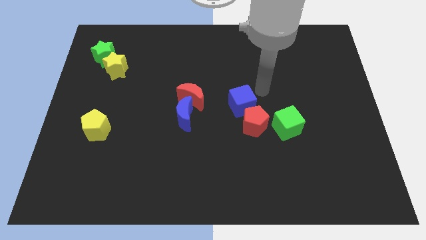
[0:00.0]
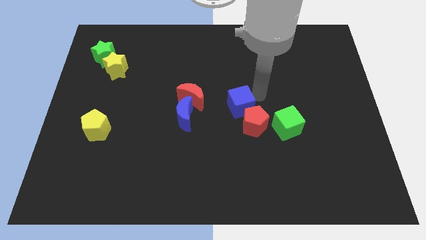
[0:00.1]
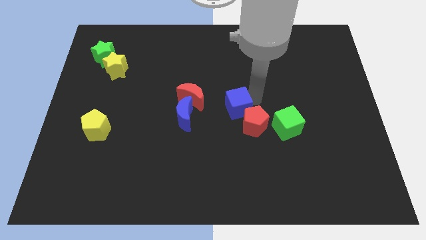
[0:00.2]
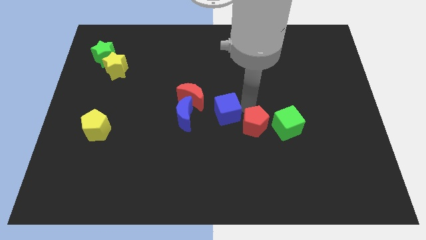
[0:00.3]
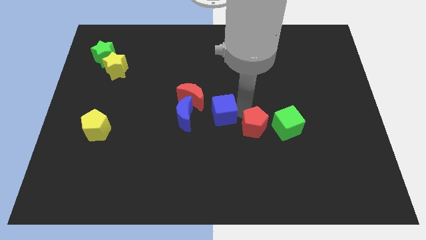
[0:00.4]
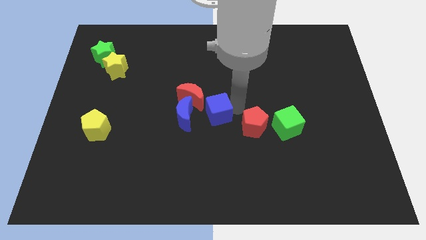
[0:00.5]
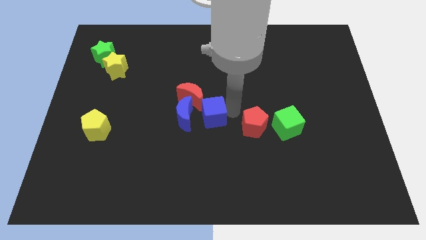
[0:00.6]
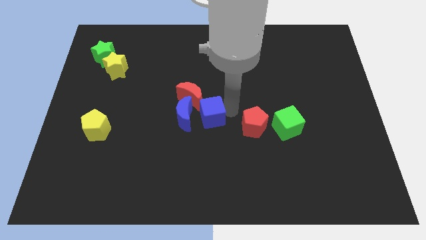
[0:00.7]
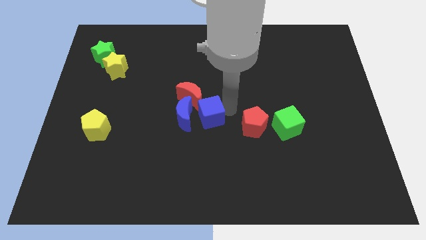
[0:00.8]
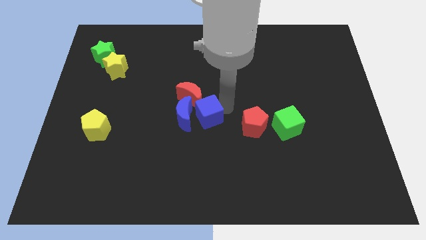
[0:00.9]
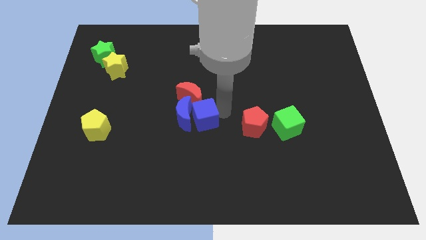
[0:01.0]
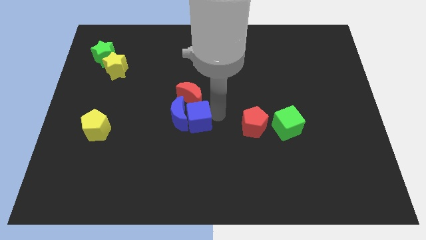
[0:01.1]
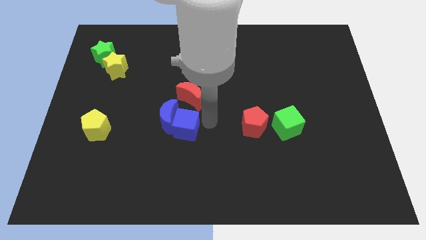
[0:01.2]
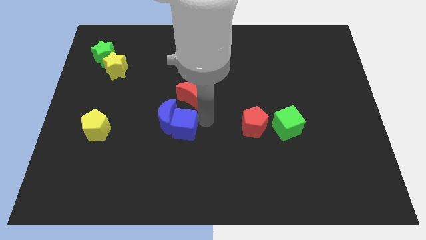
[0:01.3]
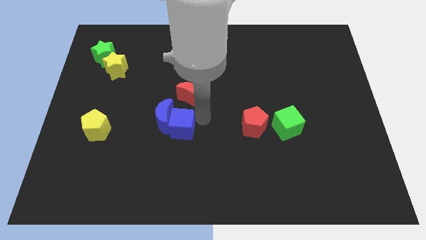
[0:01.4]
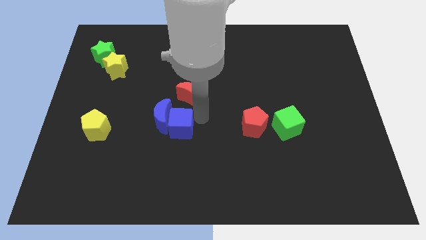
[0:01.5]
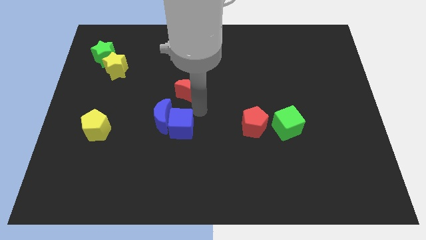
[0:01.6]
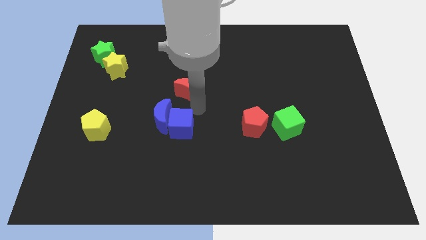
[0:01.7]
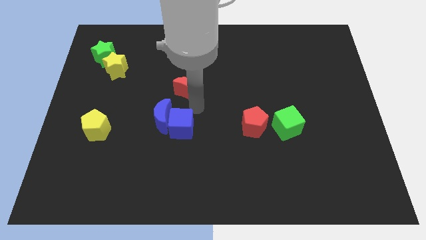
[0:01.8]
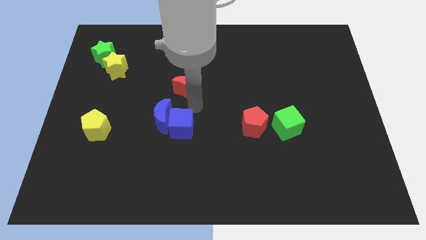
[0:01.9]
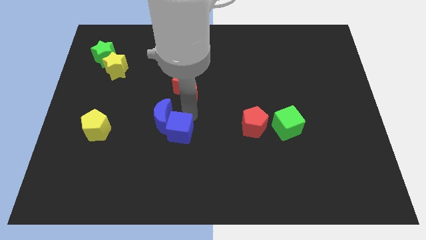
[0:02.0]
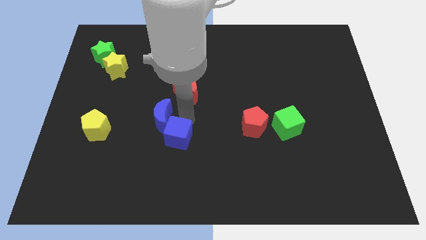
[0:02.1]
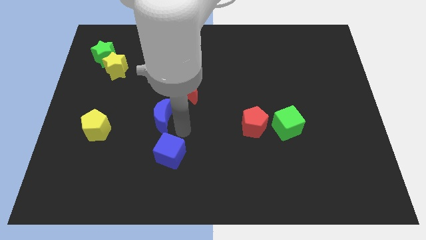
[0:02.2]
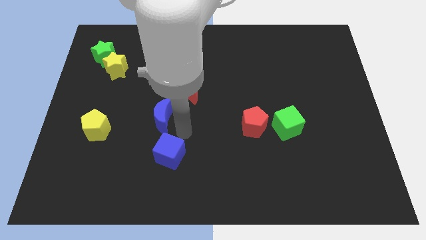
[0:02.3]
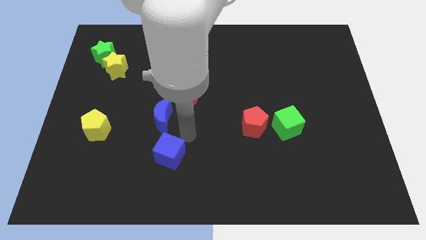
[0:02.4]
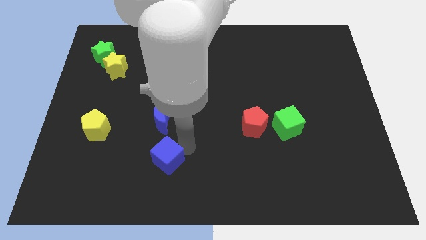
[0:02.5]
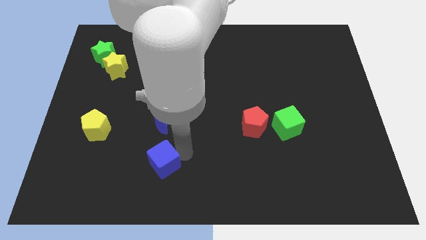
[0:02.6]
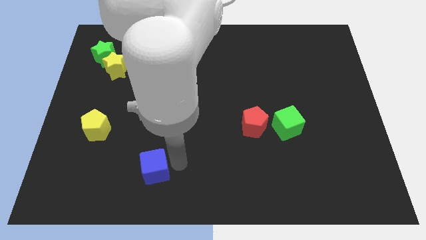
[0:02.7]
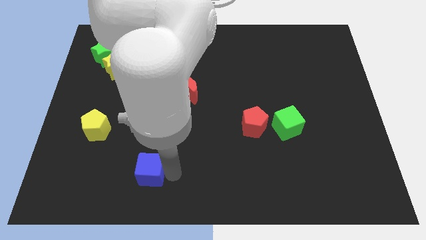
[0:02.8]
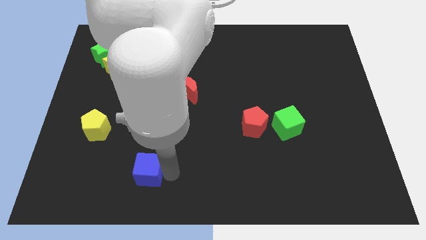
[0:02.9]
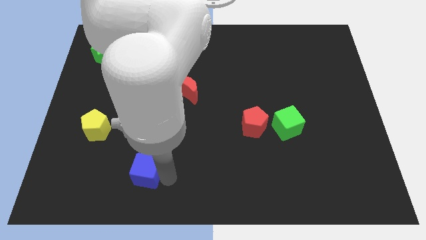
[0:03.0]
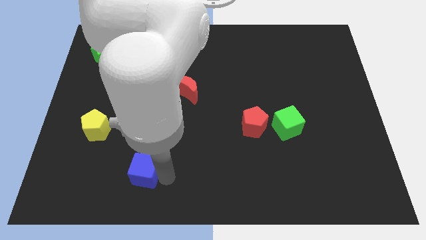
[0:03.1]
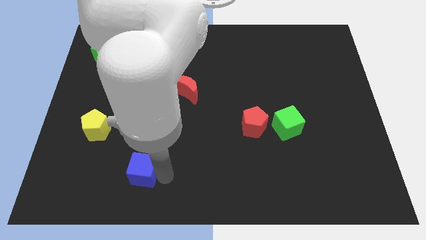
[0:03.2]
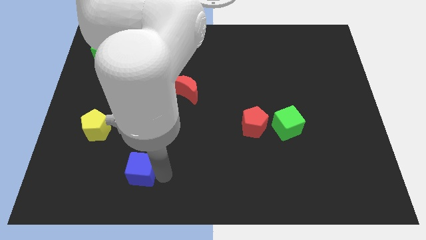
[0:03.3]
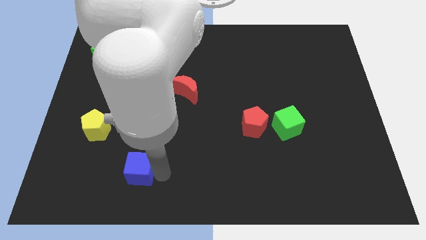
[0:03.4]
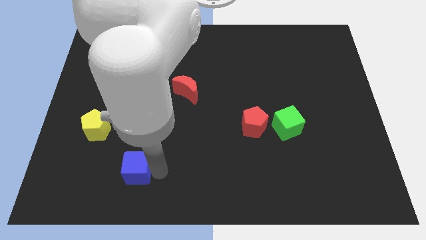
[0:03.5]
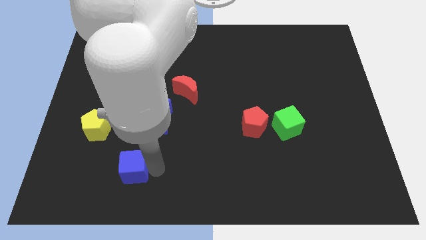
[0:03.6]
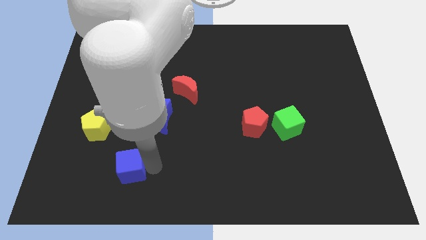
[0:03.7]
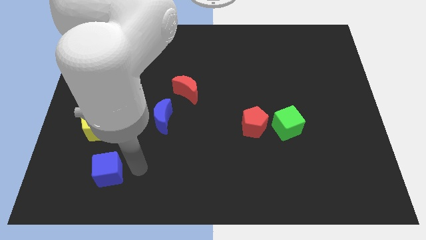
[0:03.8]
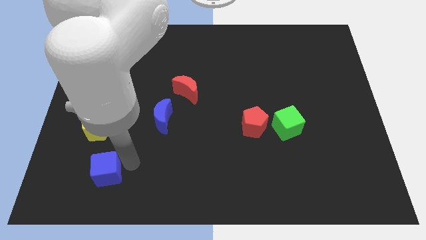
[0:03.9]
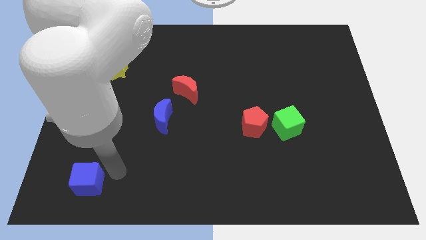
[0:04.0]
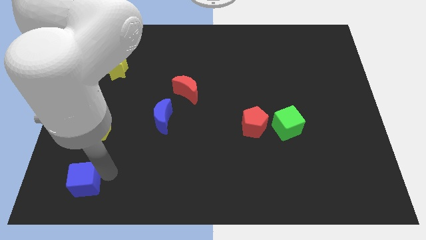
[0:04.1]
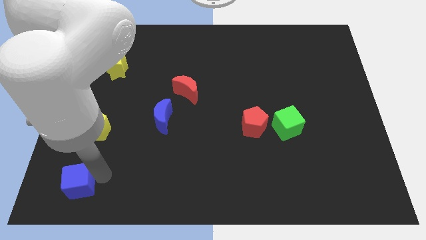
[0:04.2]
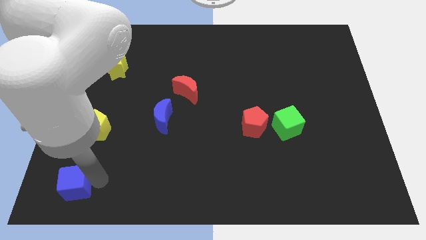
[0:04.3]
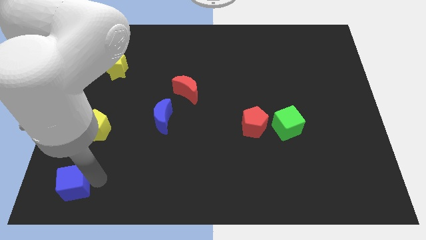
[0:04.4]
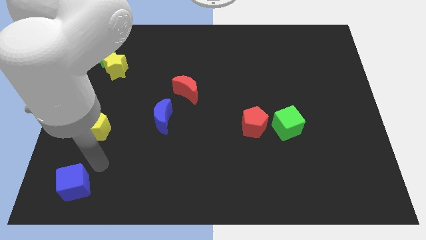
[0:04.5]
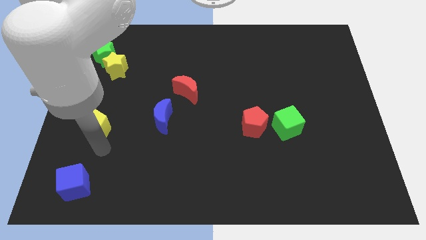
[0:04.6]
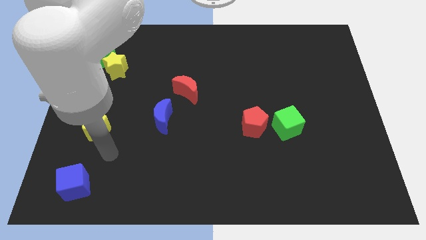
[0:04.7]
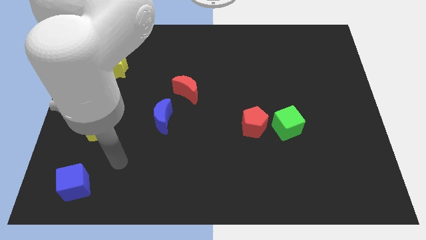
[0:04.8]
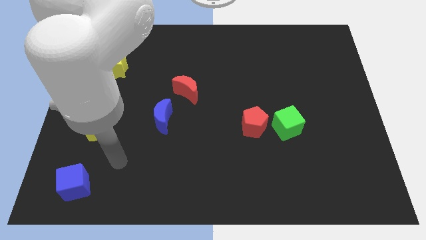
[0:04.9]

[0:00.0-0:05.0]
move the blue cube to the bottom left corner of the board

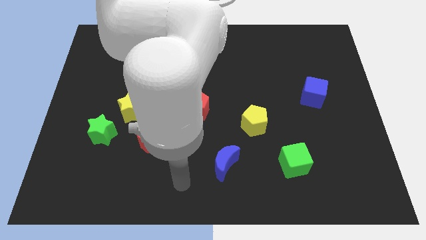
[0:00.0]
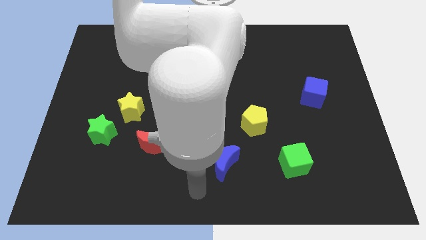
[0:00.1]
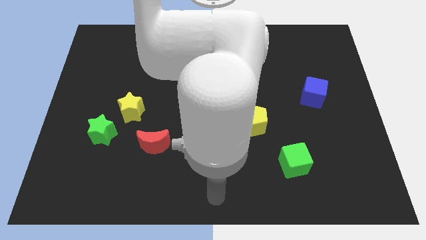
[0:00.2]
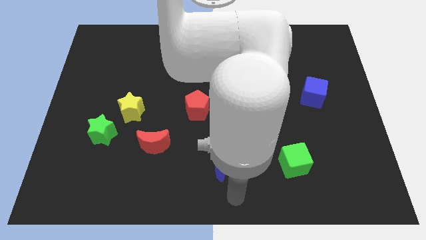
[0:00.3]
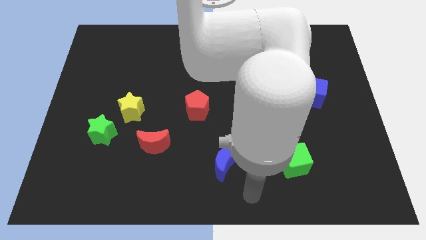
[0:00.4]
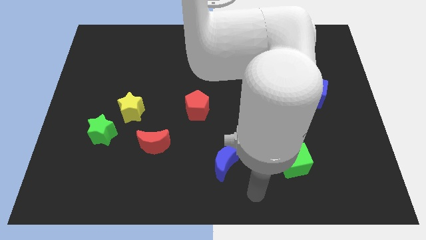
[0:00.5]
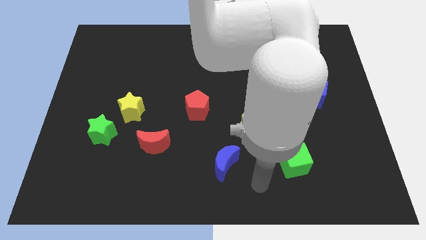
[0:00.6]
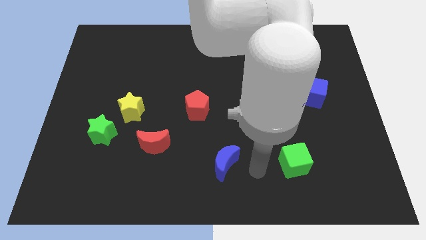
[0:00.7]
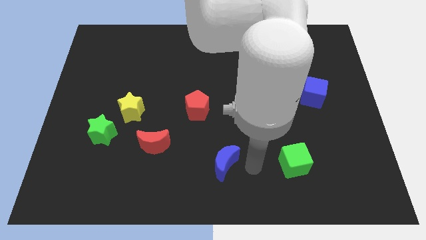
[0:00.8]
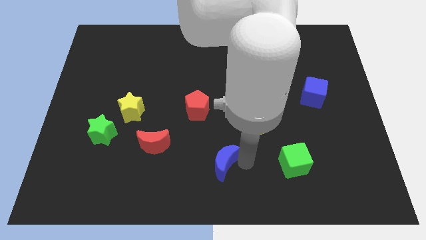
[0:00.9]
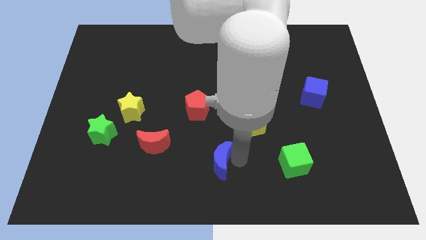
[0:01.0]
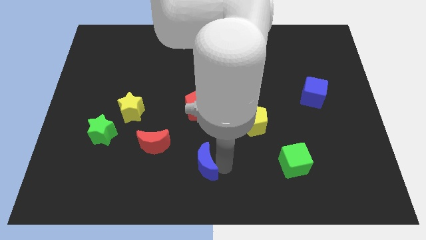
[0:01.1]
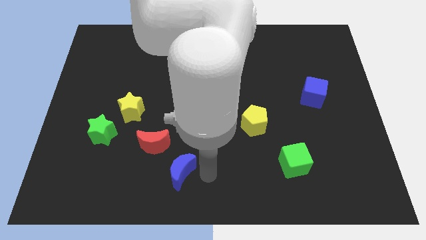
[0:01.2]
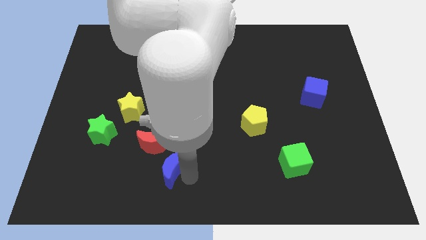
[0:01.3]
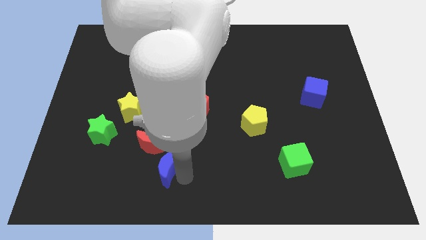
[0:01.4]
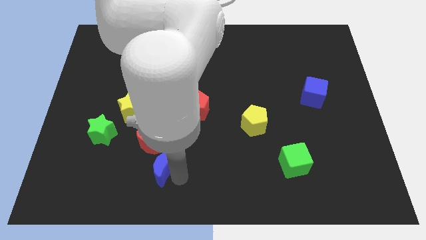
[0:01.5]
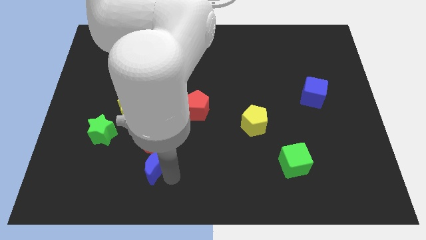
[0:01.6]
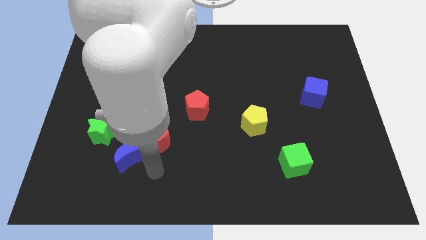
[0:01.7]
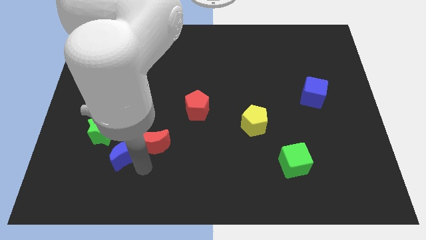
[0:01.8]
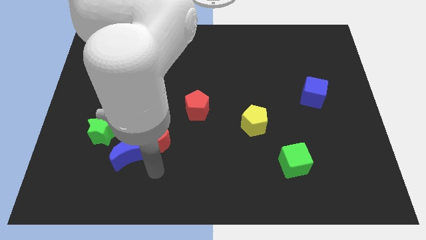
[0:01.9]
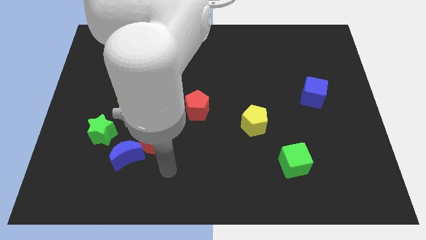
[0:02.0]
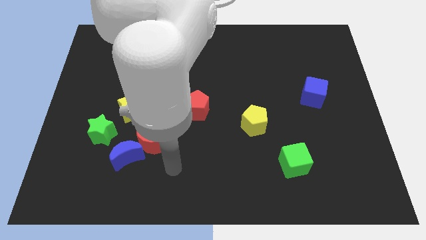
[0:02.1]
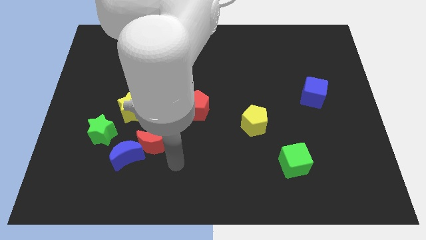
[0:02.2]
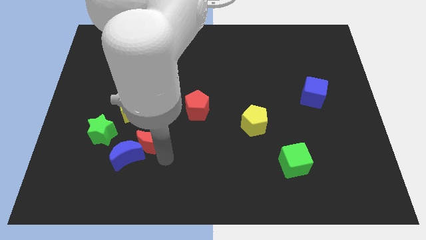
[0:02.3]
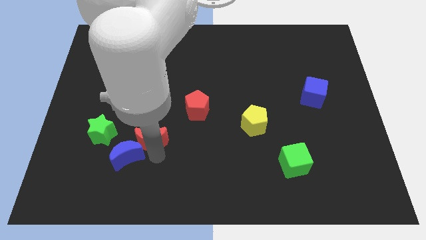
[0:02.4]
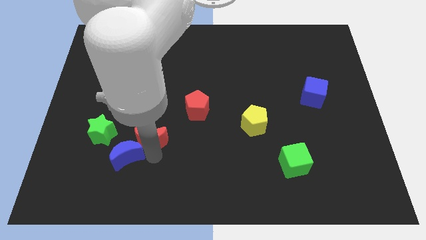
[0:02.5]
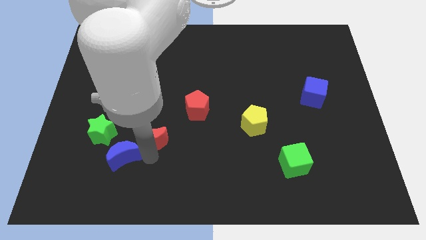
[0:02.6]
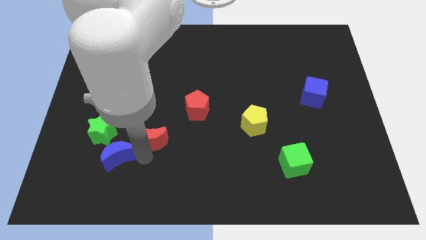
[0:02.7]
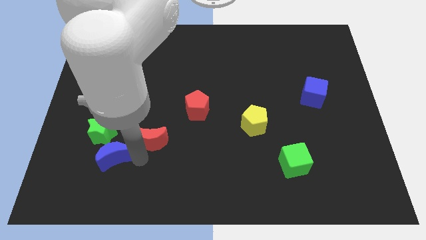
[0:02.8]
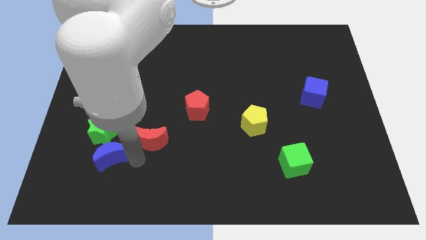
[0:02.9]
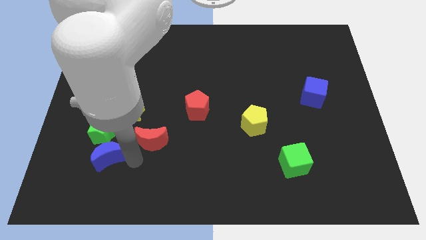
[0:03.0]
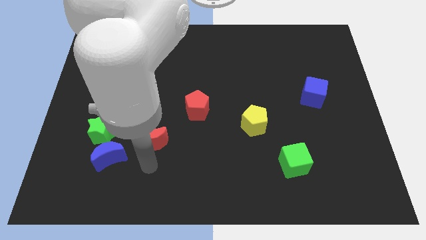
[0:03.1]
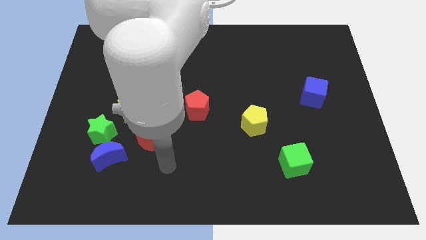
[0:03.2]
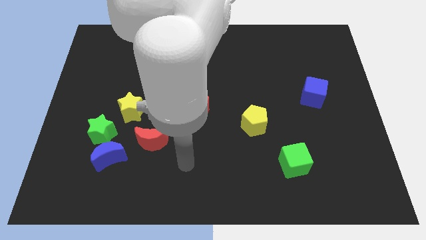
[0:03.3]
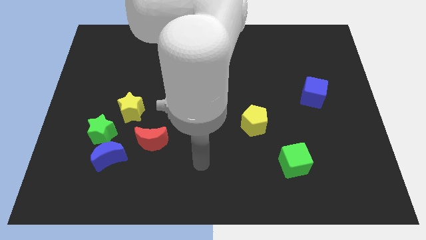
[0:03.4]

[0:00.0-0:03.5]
move the blue moon to the bottom right side of the green star

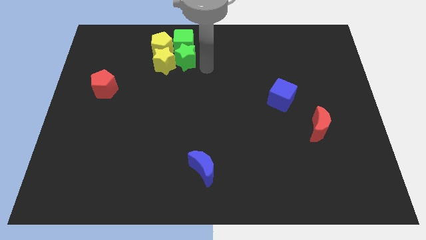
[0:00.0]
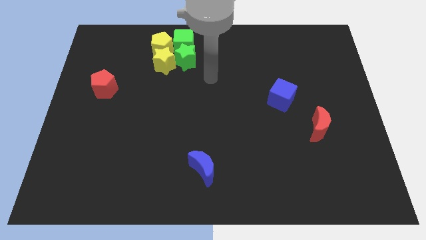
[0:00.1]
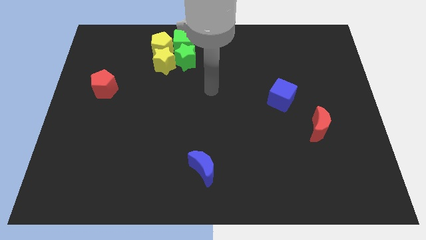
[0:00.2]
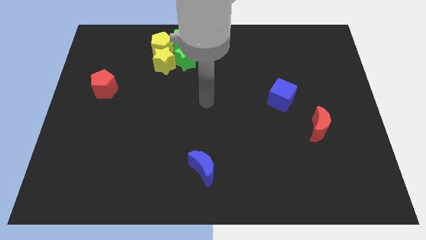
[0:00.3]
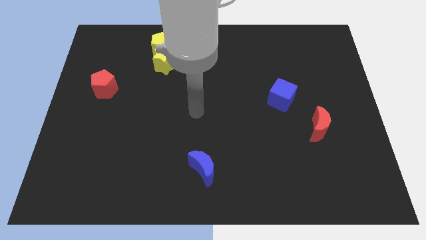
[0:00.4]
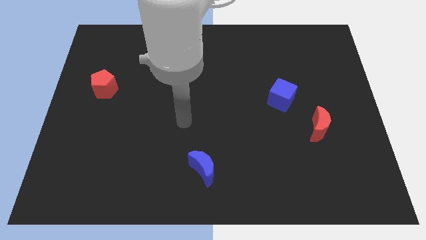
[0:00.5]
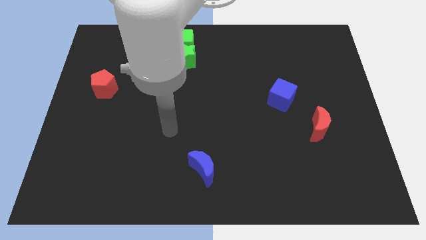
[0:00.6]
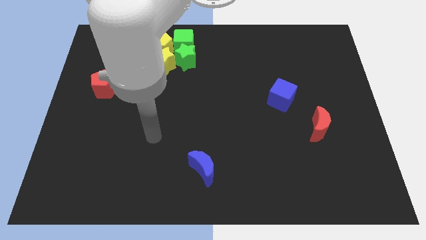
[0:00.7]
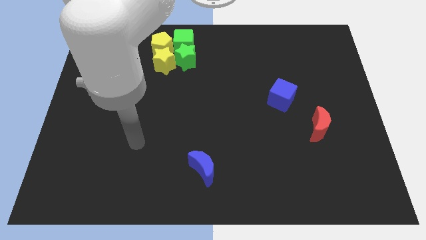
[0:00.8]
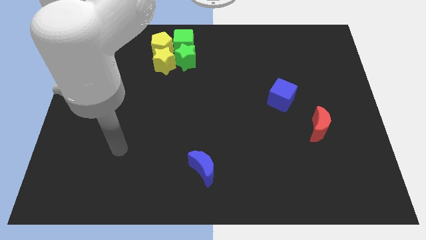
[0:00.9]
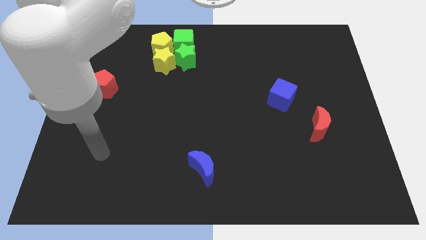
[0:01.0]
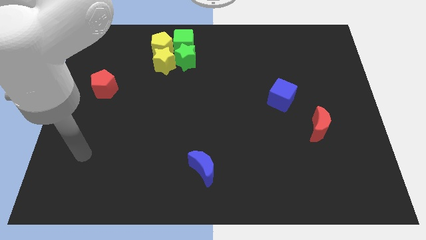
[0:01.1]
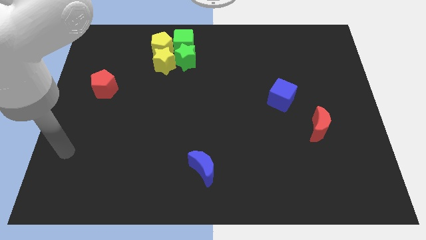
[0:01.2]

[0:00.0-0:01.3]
move the arm away from the green blocks
